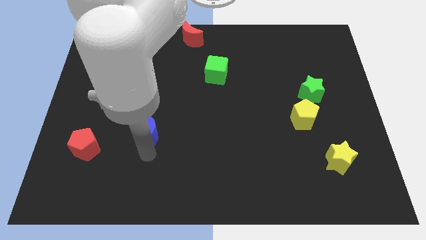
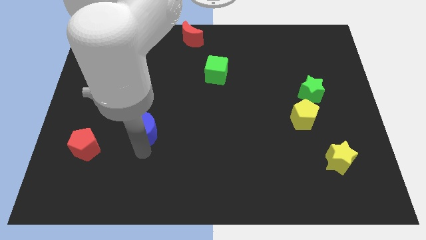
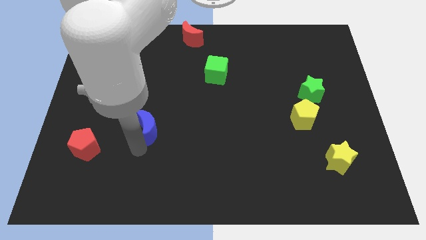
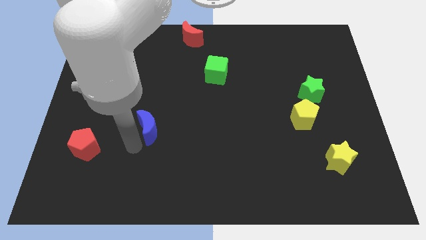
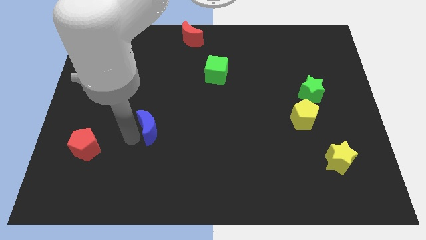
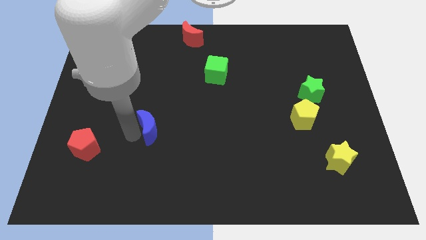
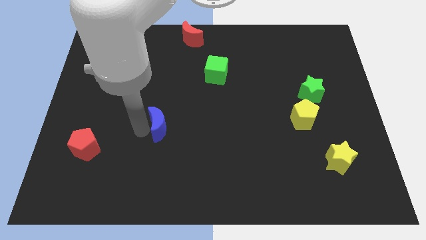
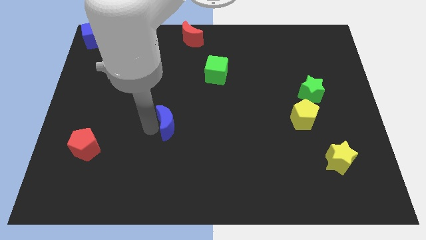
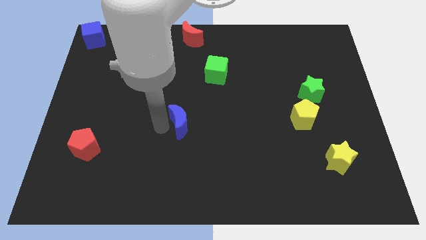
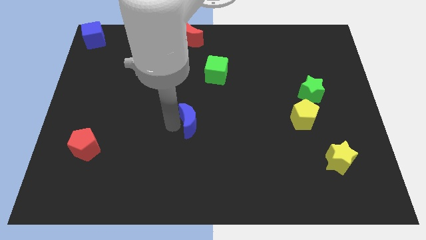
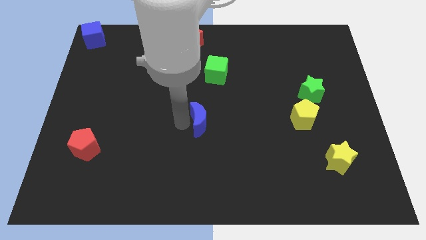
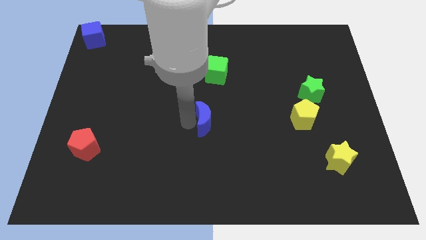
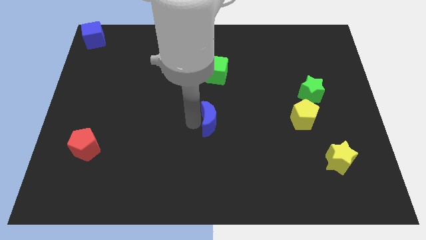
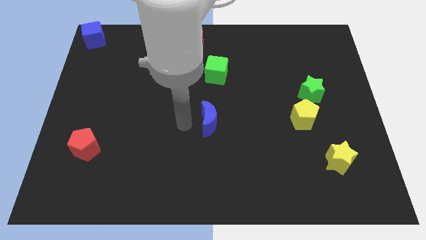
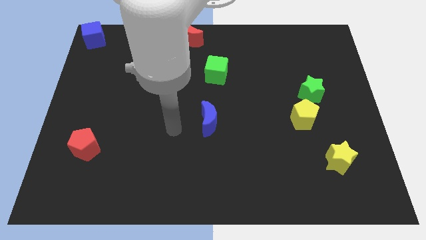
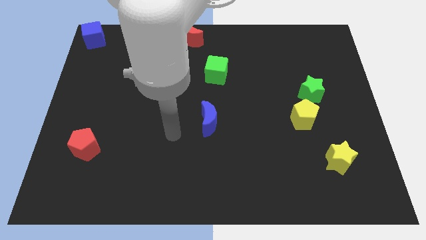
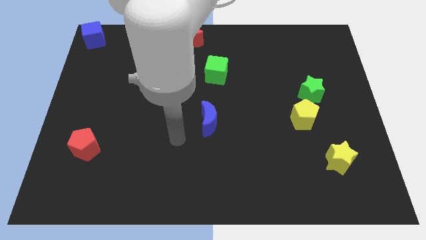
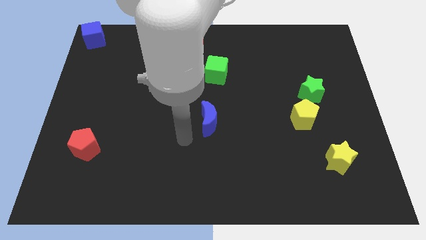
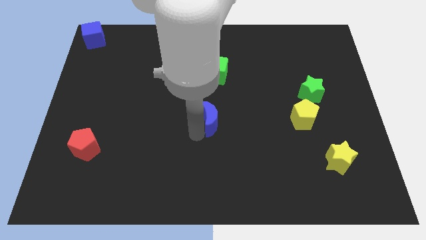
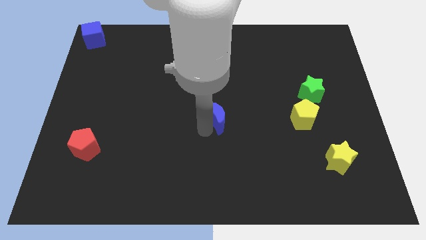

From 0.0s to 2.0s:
slide the blue moon to the center of the board

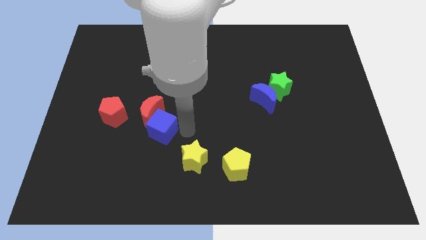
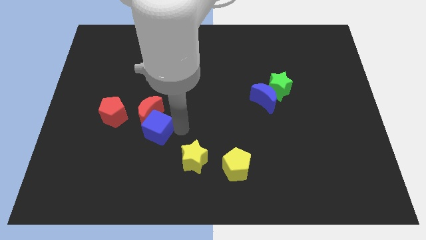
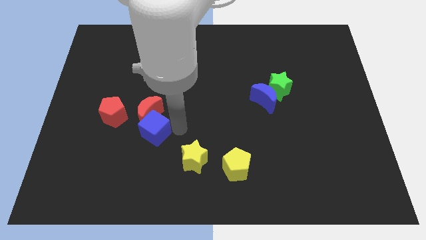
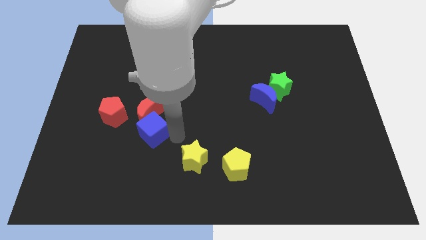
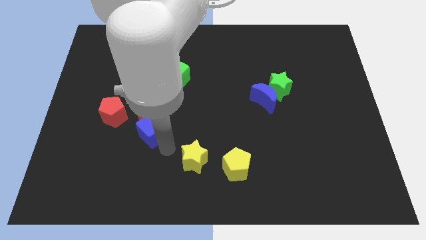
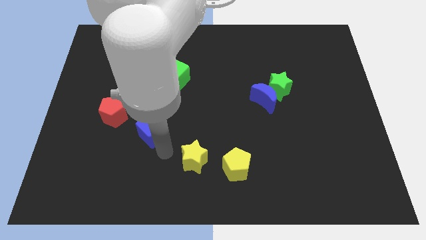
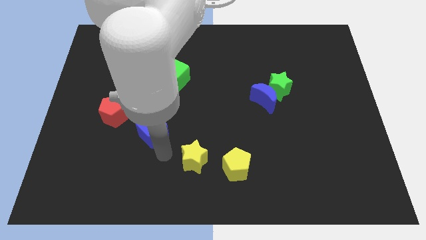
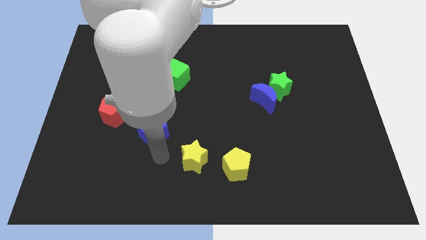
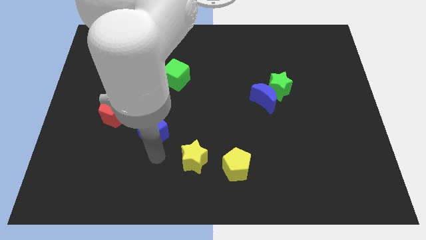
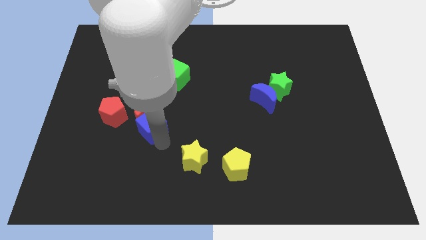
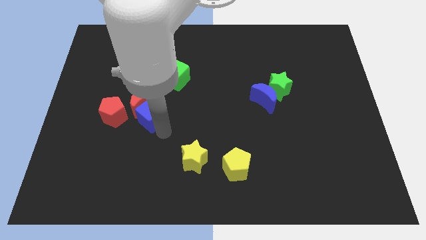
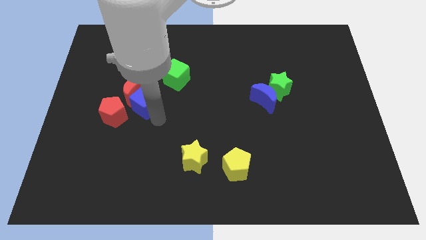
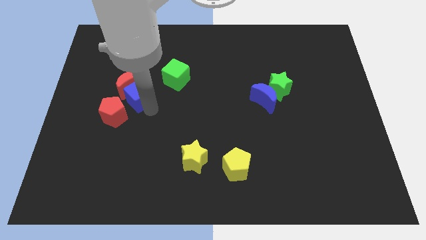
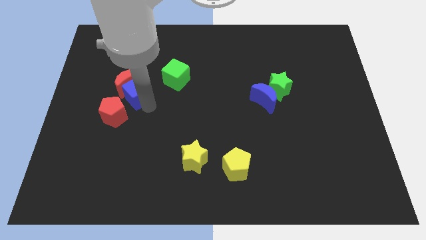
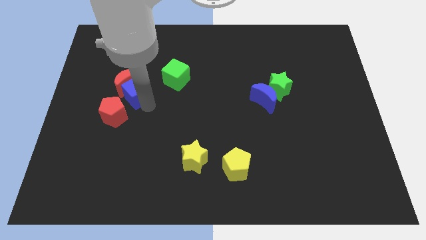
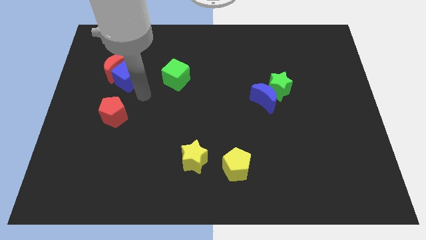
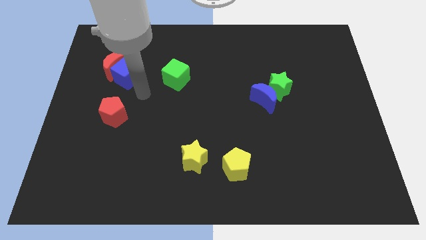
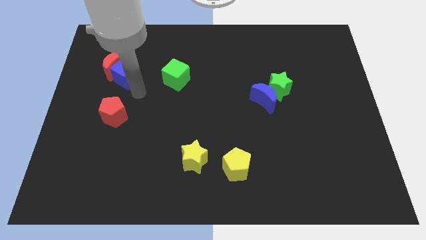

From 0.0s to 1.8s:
push the blue cube to the top side of the red pentagon

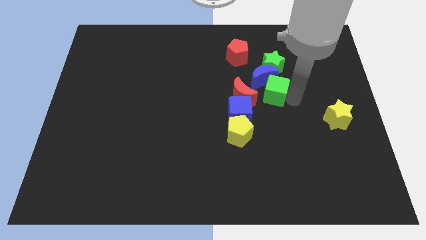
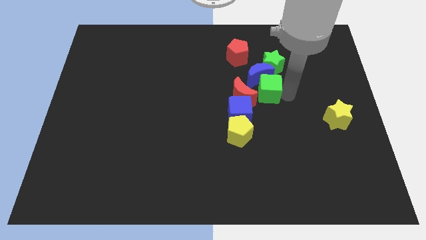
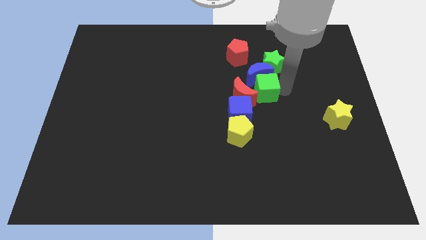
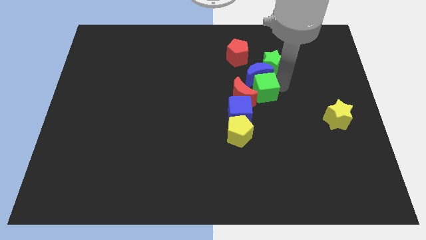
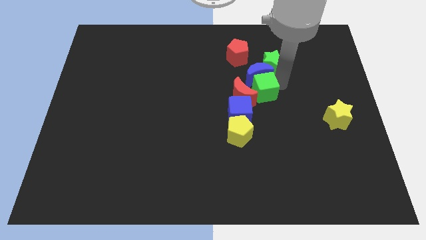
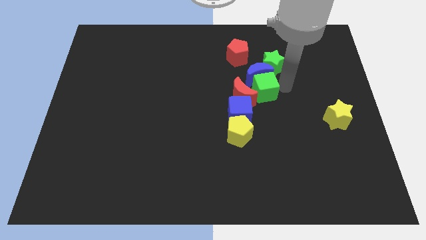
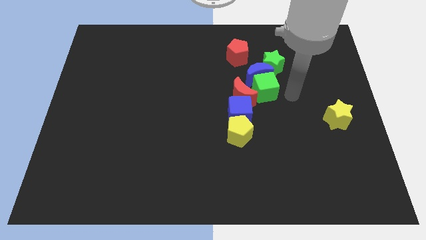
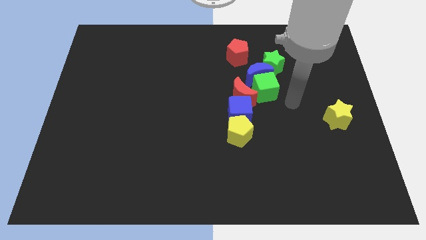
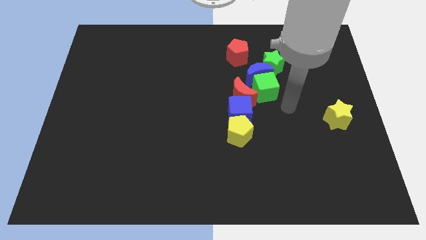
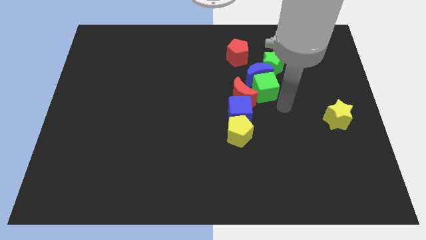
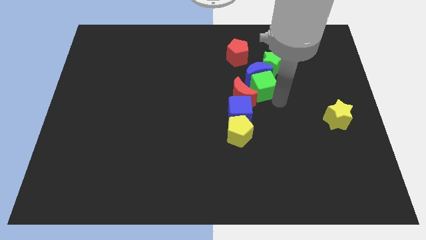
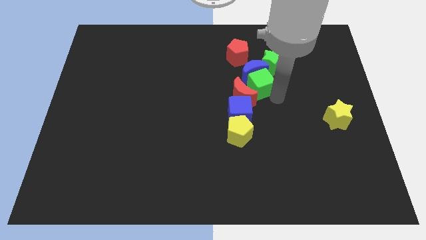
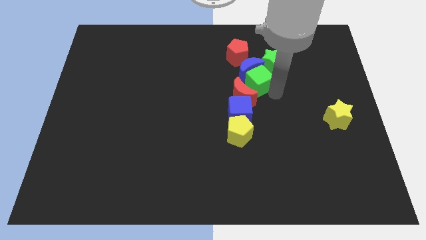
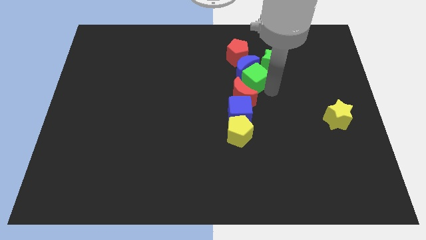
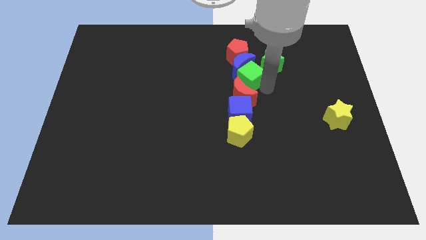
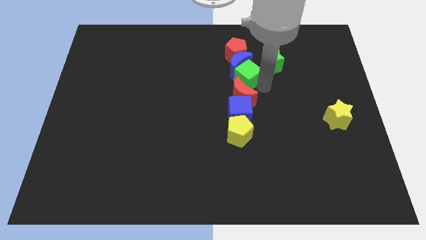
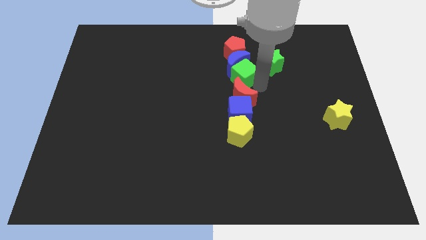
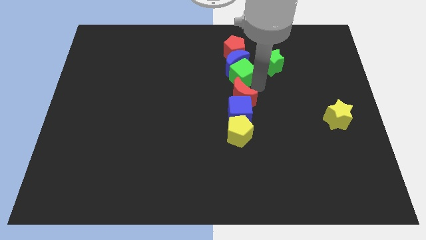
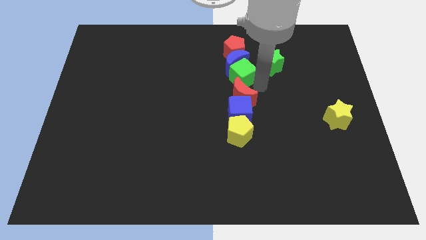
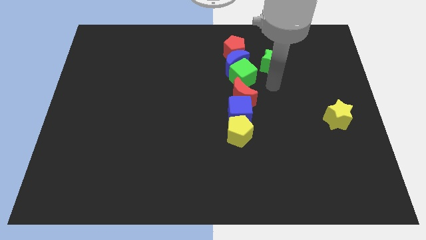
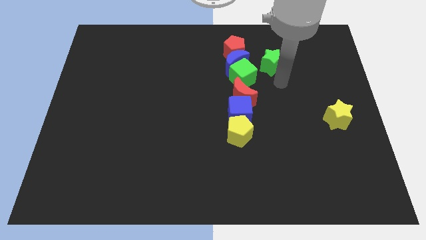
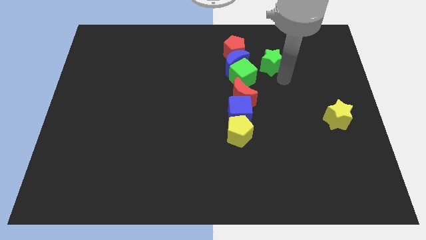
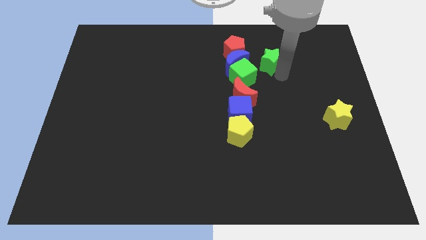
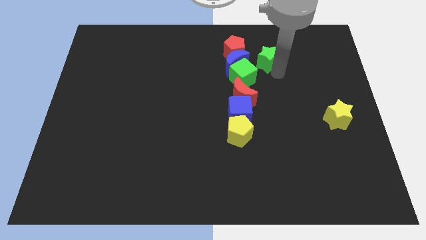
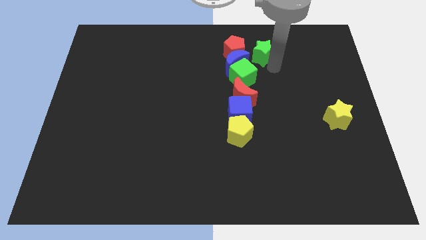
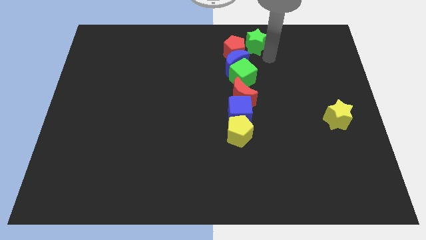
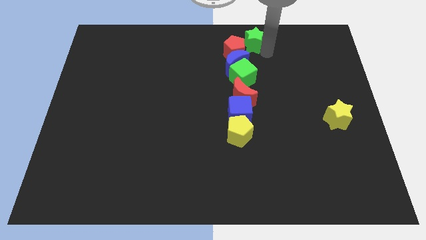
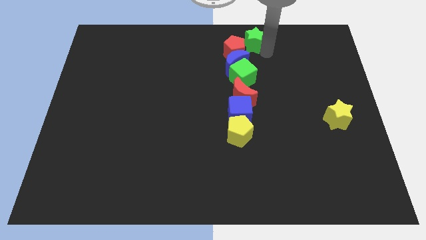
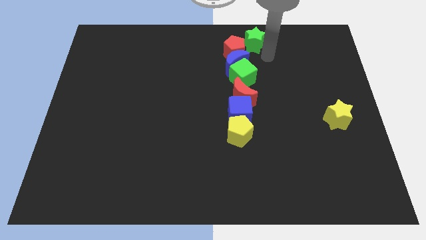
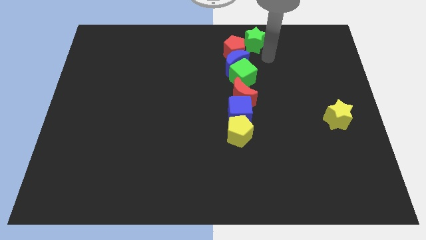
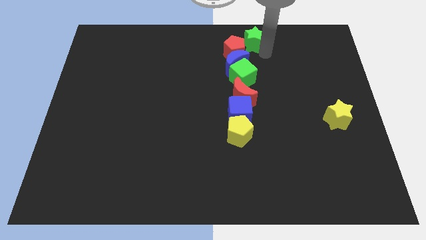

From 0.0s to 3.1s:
push the green star to the top center

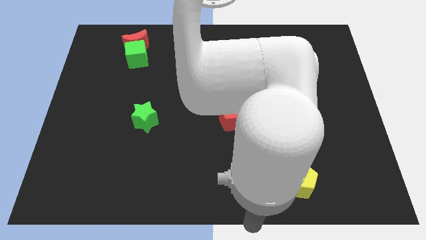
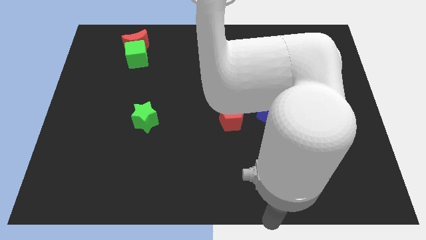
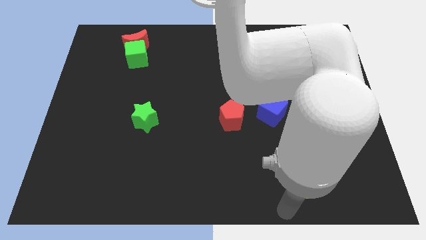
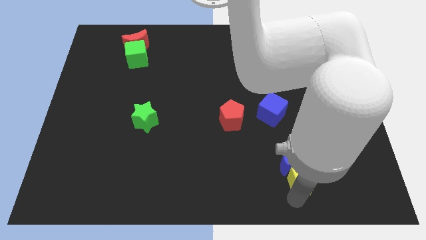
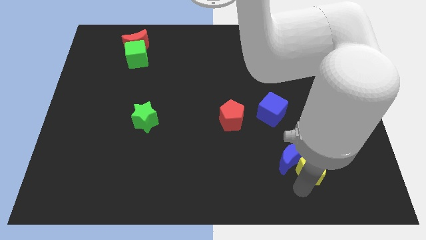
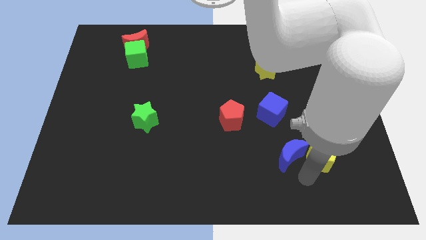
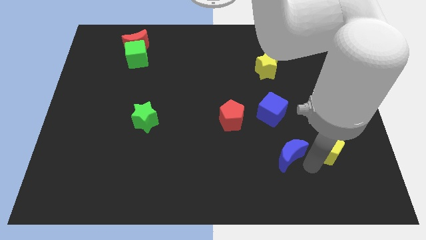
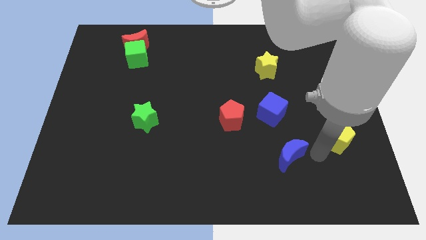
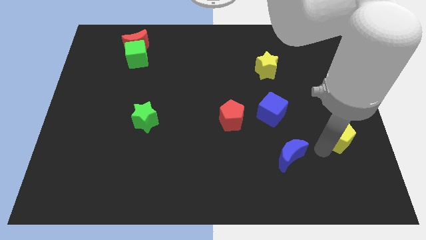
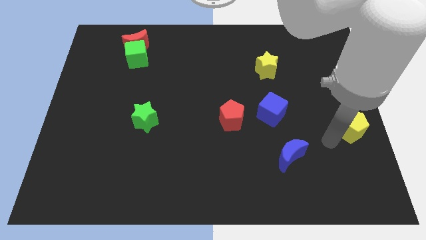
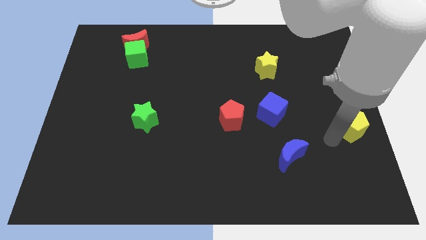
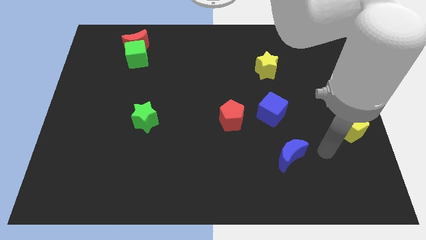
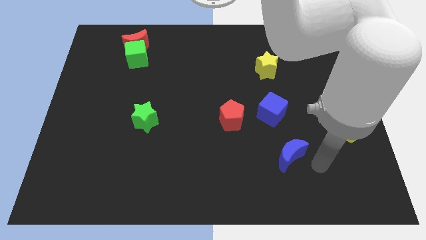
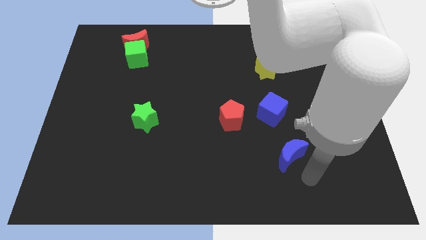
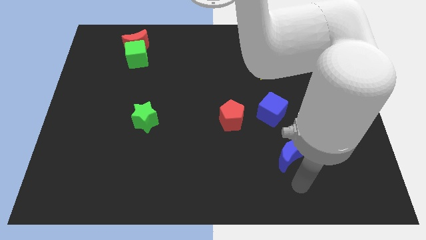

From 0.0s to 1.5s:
separate yellow pentagon from the blue moon

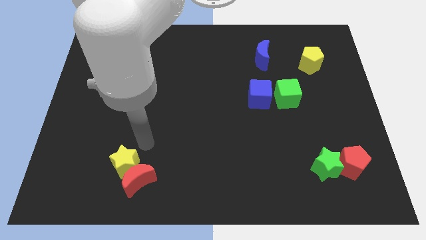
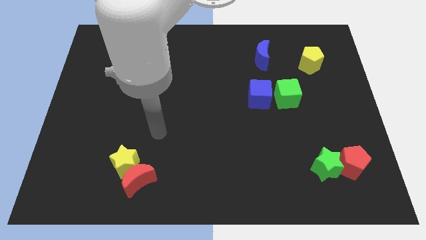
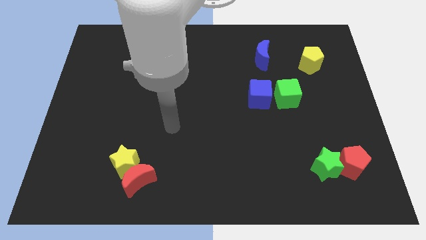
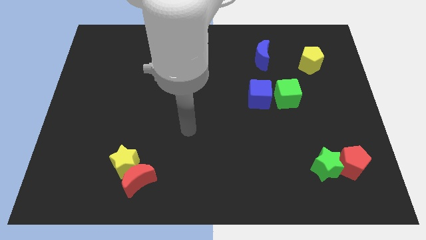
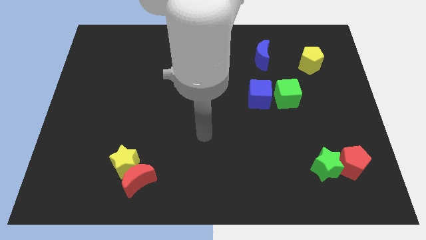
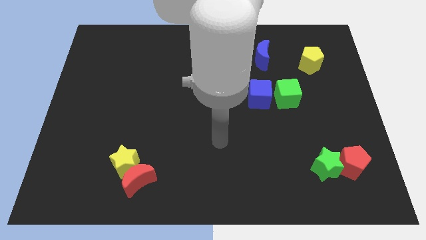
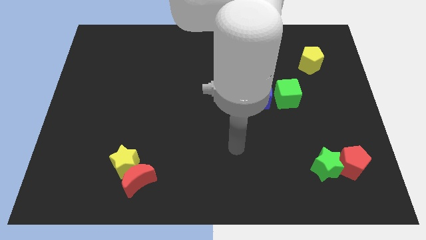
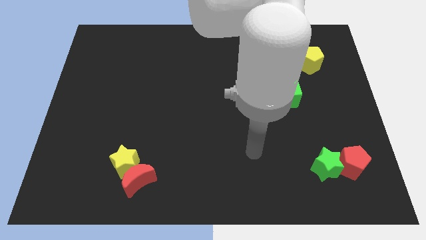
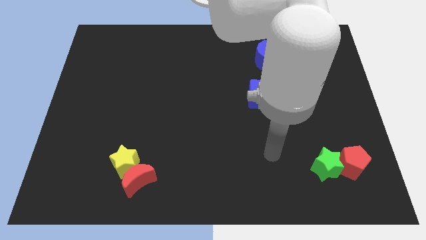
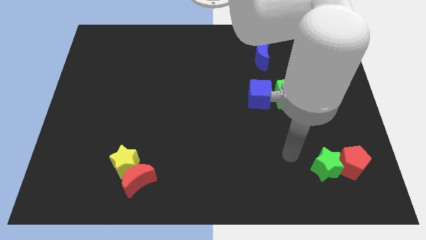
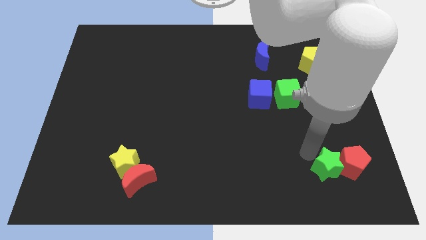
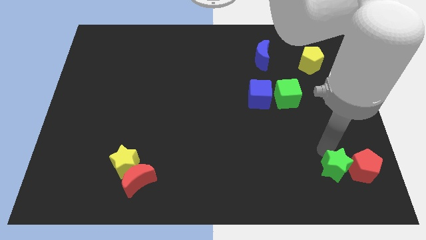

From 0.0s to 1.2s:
move the arm close to the green star
